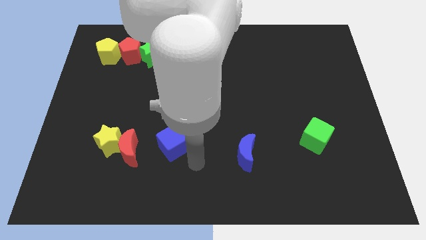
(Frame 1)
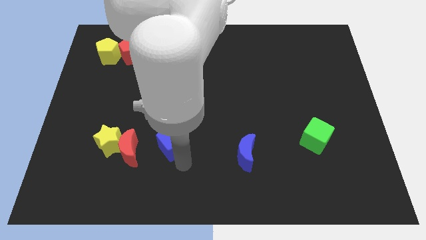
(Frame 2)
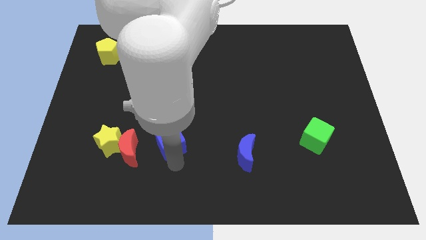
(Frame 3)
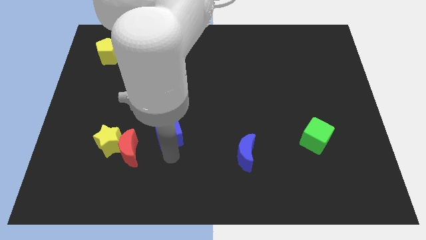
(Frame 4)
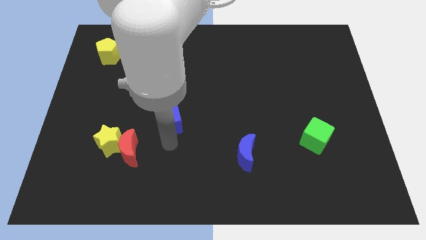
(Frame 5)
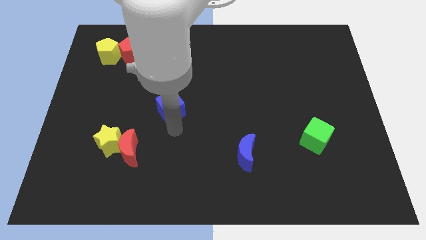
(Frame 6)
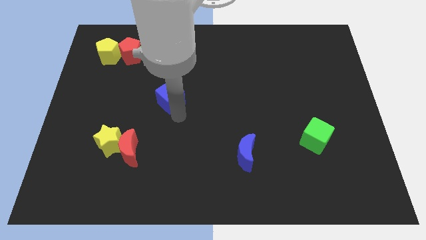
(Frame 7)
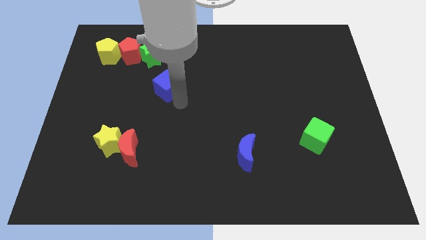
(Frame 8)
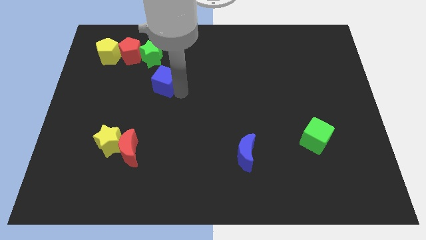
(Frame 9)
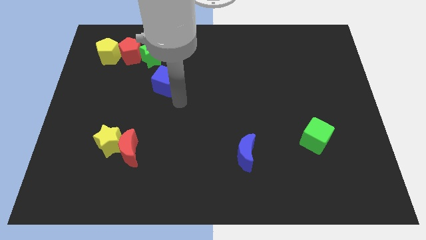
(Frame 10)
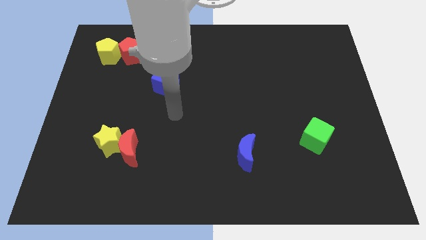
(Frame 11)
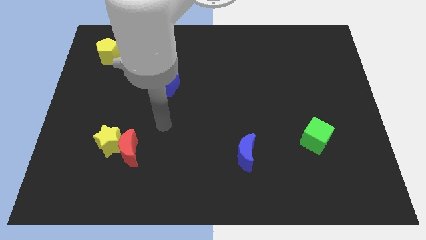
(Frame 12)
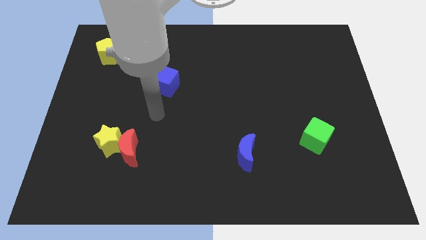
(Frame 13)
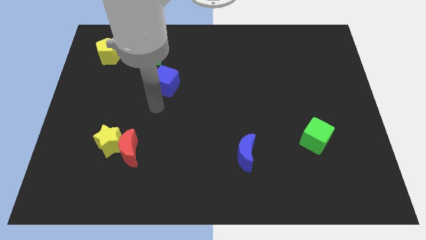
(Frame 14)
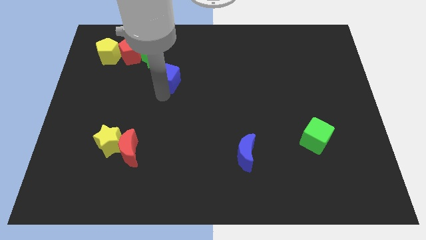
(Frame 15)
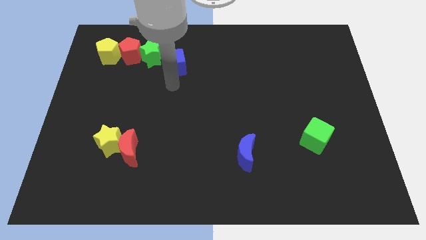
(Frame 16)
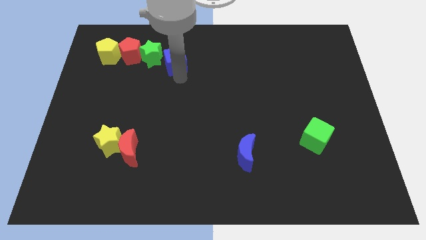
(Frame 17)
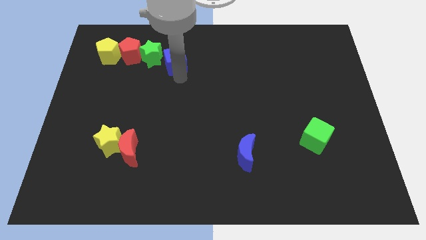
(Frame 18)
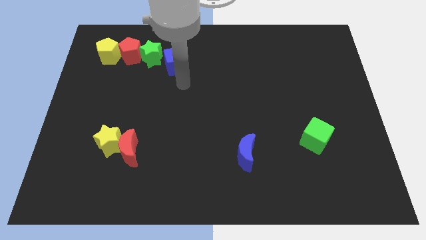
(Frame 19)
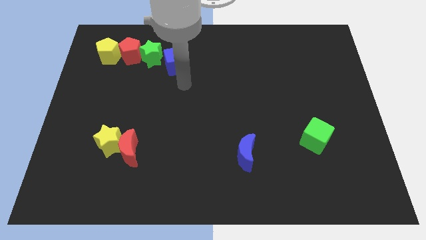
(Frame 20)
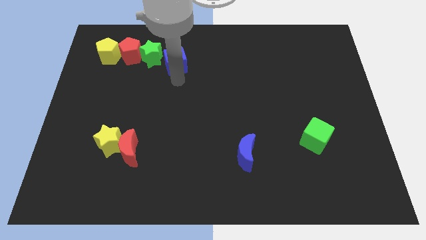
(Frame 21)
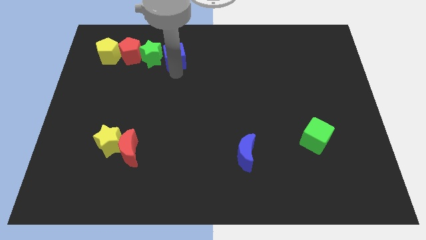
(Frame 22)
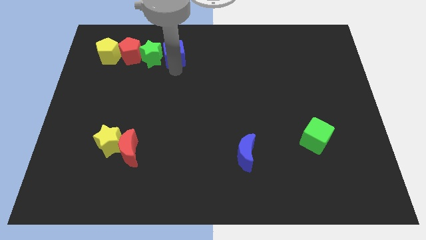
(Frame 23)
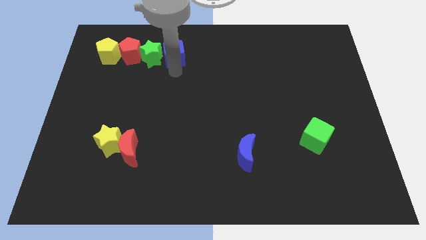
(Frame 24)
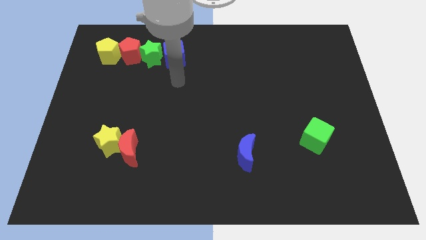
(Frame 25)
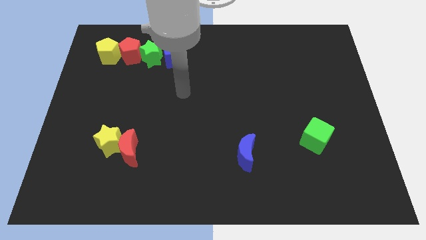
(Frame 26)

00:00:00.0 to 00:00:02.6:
place the blue cube to the right of the green star

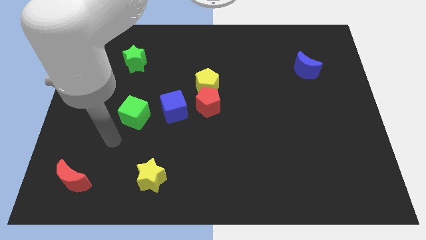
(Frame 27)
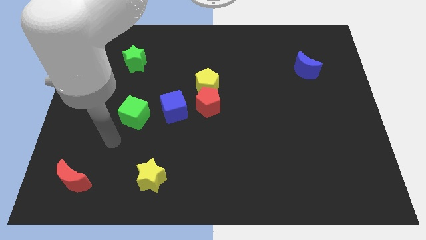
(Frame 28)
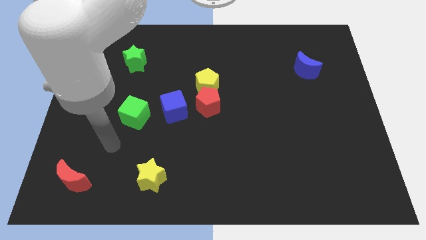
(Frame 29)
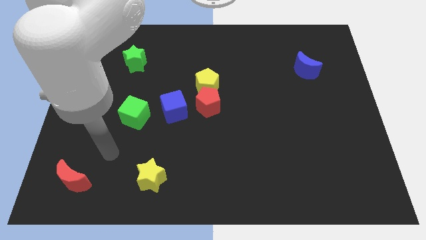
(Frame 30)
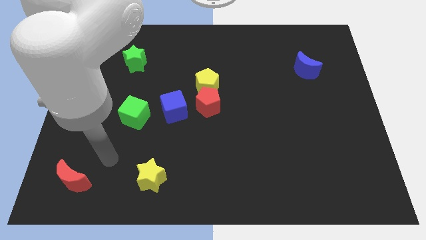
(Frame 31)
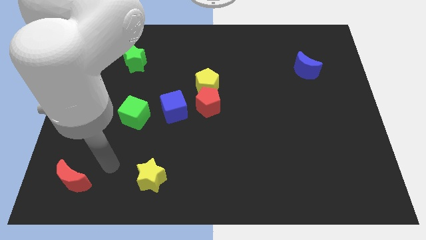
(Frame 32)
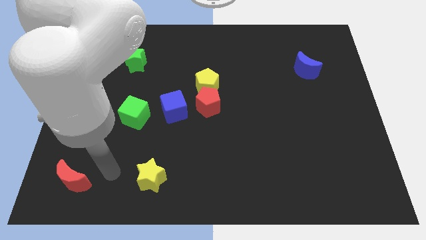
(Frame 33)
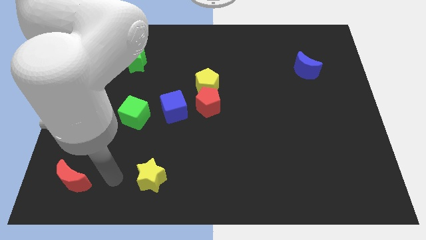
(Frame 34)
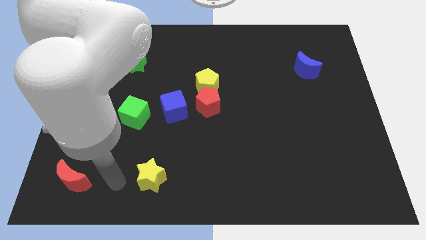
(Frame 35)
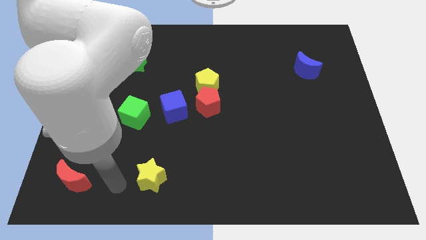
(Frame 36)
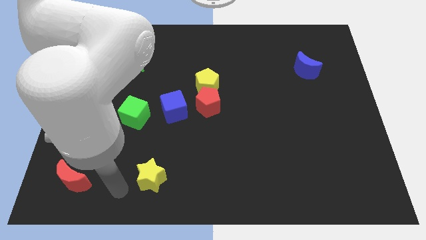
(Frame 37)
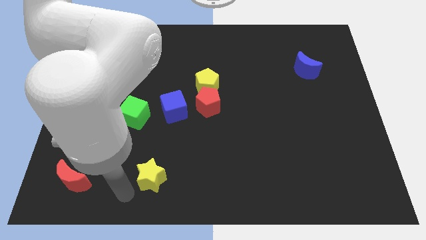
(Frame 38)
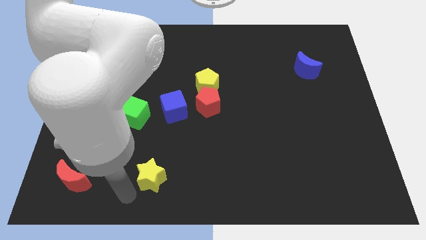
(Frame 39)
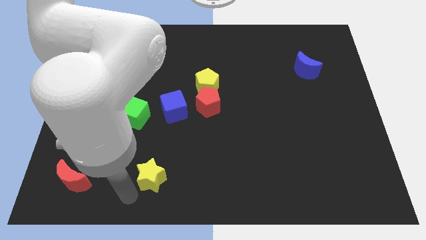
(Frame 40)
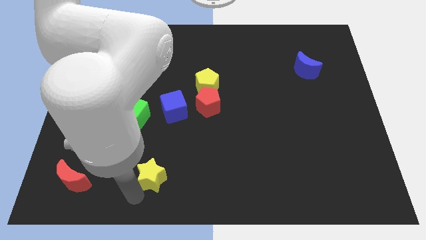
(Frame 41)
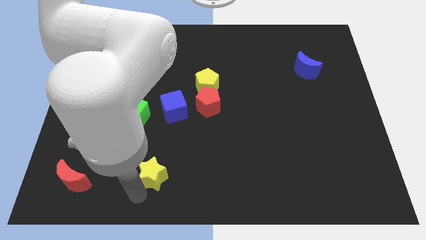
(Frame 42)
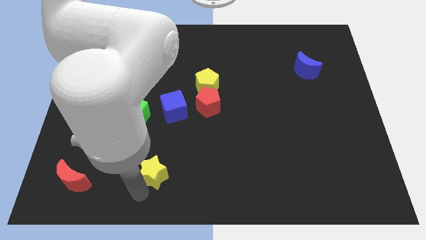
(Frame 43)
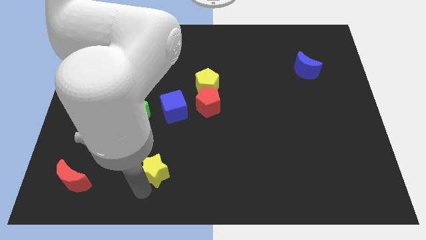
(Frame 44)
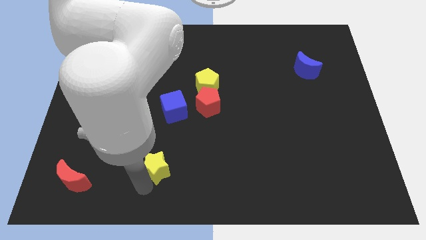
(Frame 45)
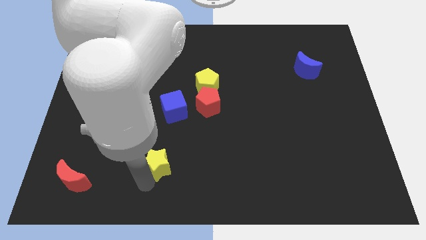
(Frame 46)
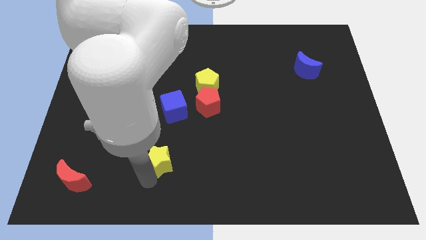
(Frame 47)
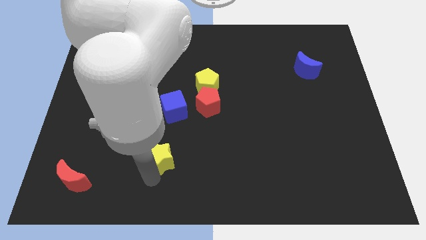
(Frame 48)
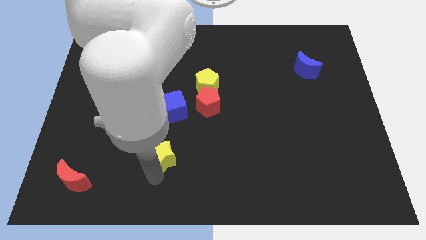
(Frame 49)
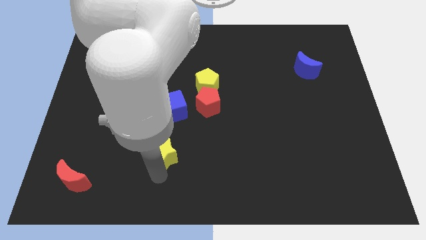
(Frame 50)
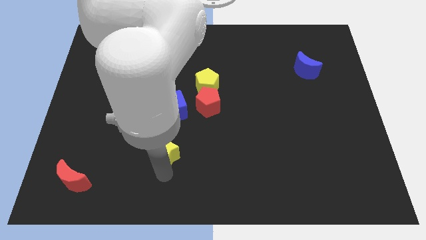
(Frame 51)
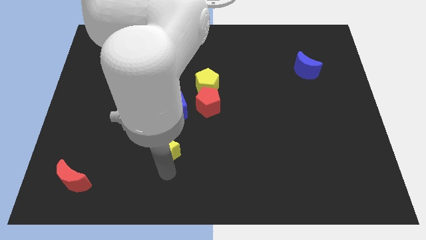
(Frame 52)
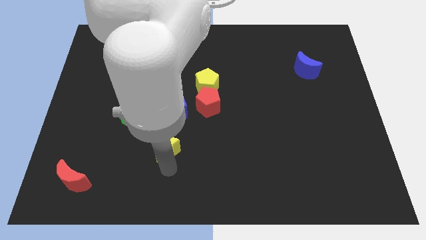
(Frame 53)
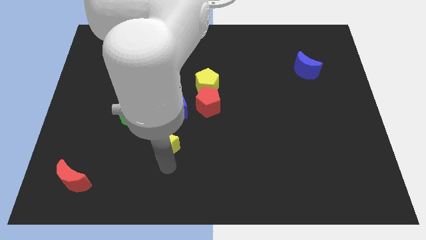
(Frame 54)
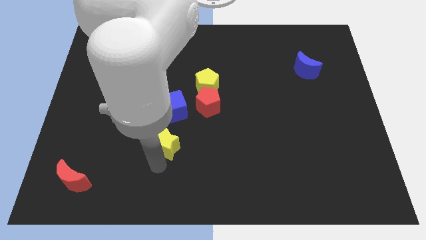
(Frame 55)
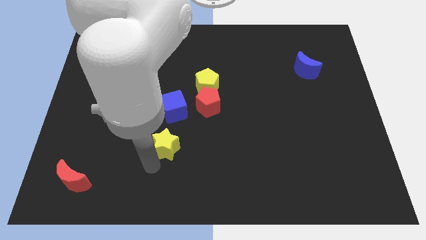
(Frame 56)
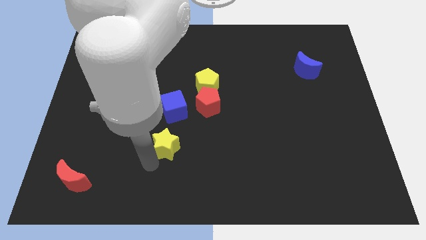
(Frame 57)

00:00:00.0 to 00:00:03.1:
slide the yellow star diagonally to the green cube

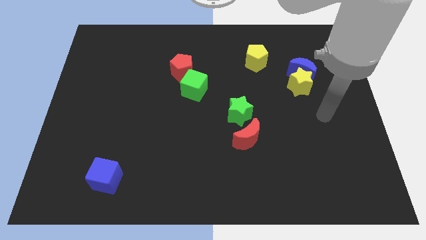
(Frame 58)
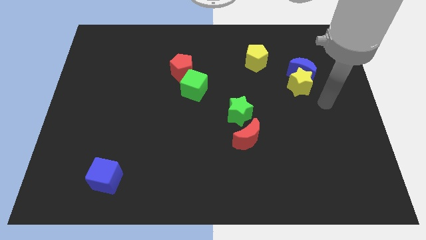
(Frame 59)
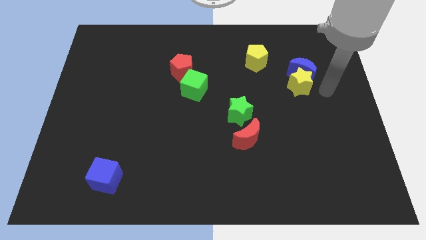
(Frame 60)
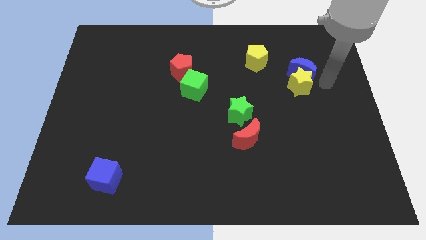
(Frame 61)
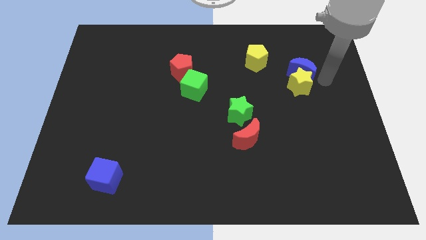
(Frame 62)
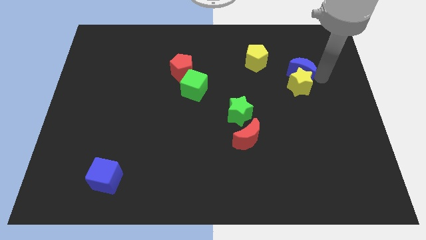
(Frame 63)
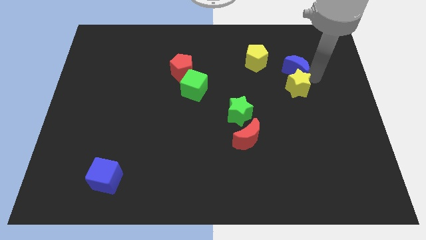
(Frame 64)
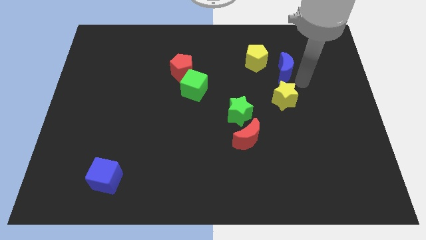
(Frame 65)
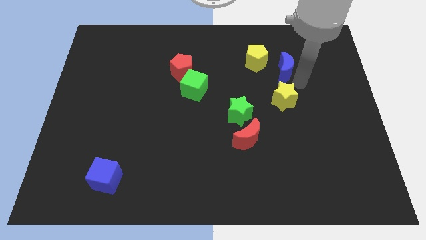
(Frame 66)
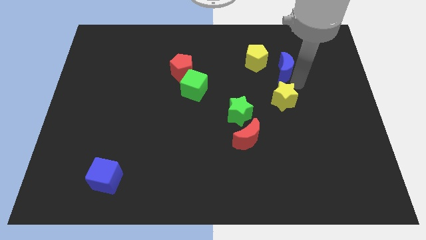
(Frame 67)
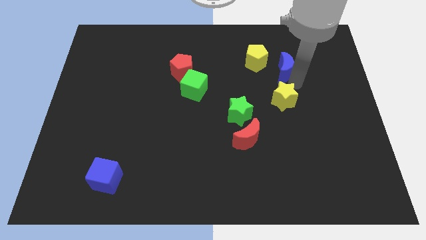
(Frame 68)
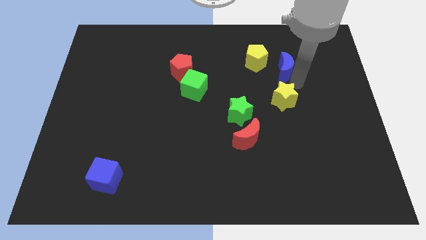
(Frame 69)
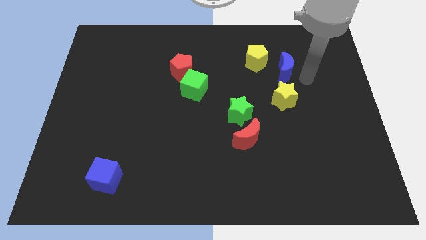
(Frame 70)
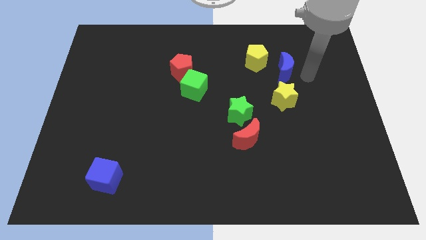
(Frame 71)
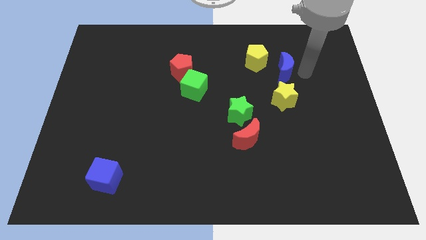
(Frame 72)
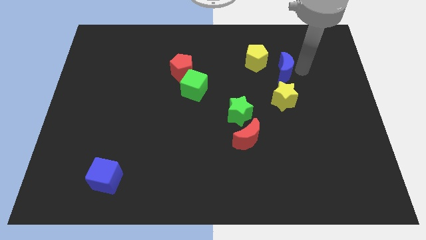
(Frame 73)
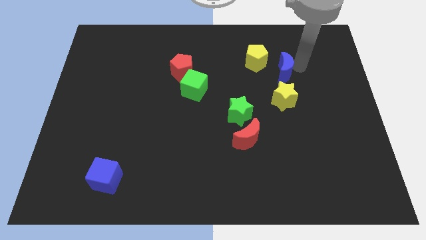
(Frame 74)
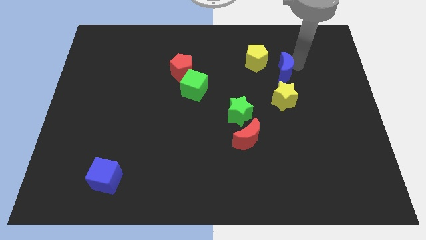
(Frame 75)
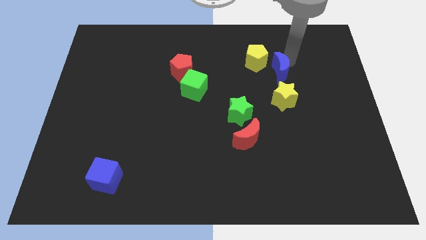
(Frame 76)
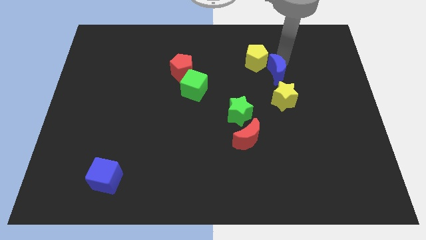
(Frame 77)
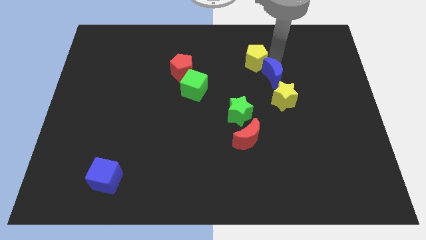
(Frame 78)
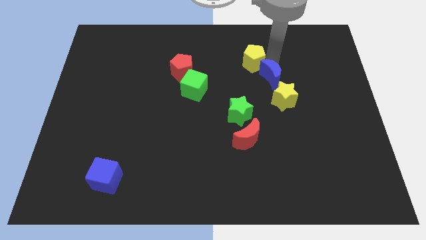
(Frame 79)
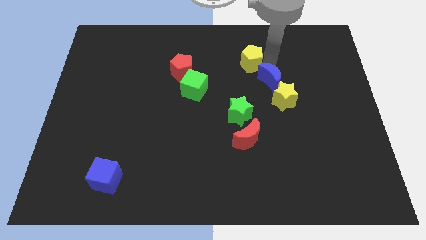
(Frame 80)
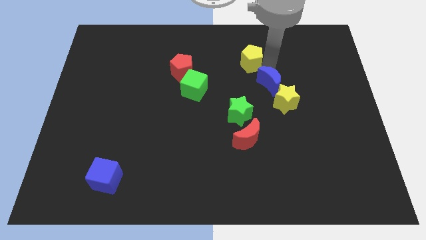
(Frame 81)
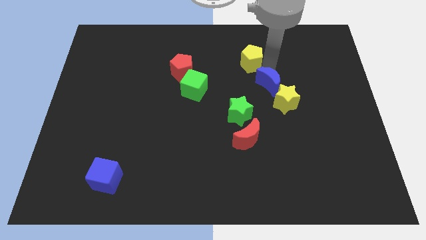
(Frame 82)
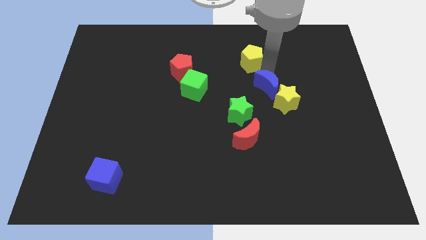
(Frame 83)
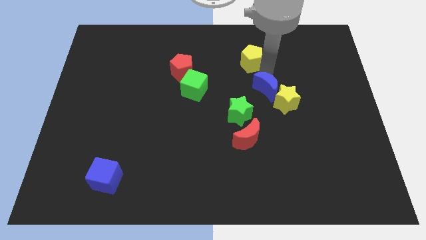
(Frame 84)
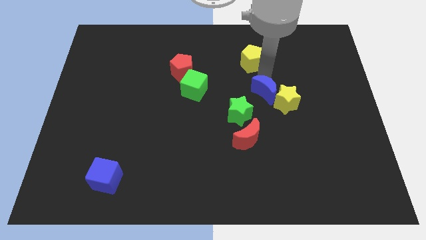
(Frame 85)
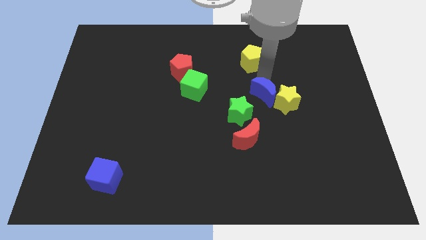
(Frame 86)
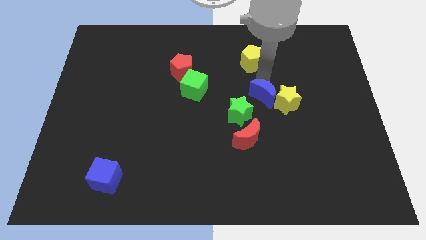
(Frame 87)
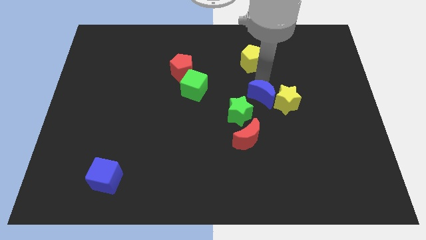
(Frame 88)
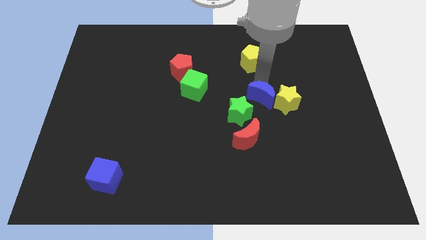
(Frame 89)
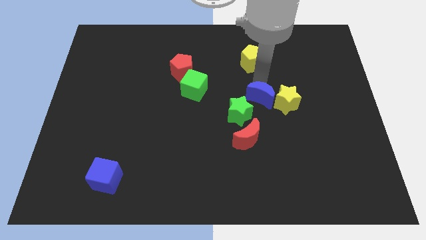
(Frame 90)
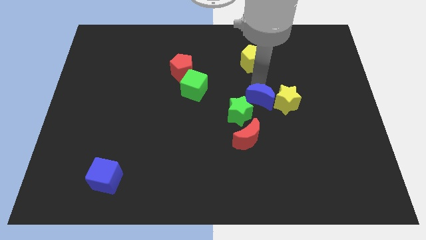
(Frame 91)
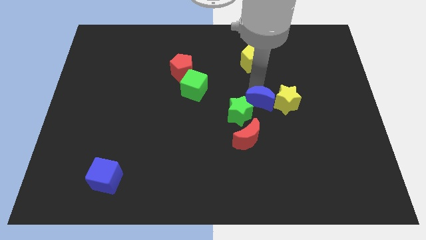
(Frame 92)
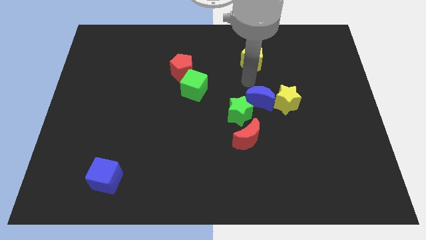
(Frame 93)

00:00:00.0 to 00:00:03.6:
push blue crescent below yellow pentagon
